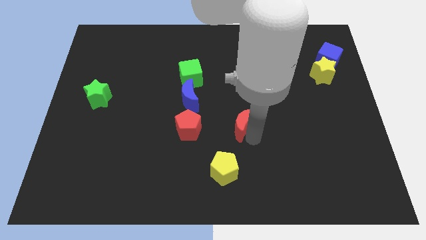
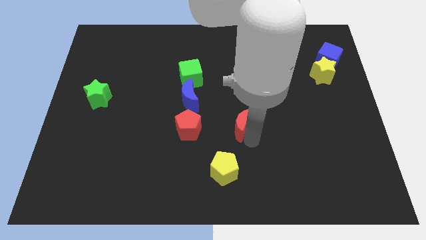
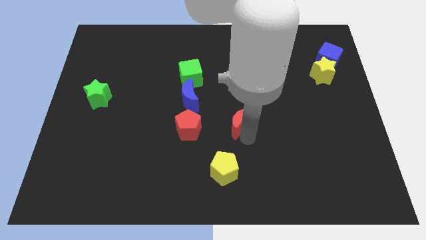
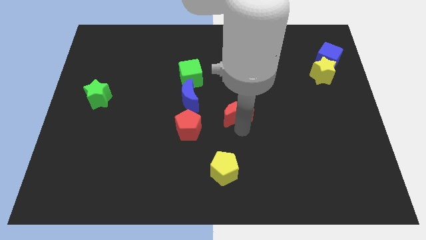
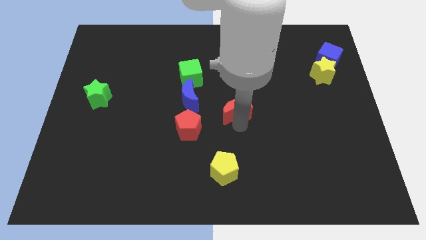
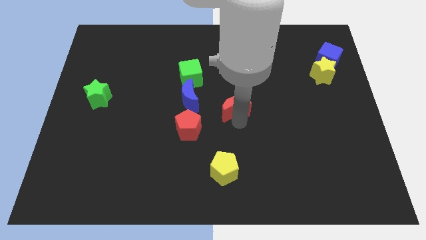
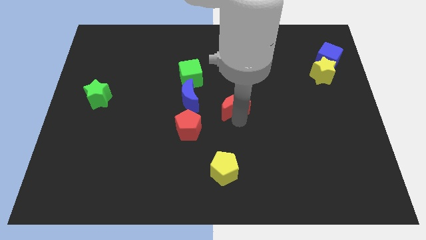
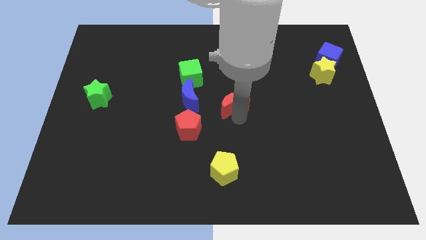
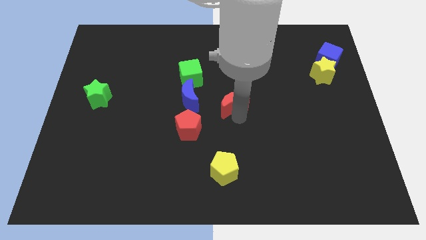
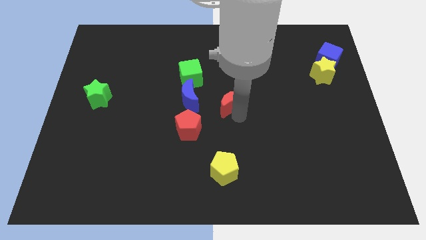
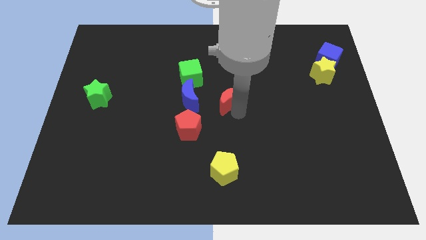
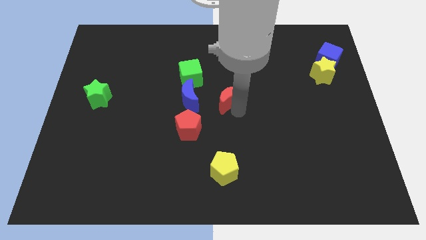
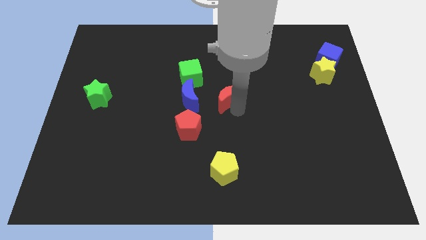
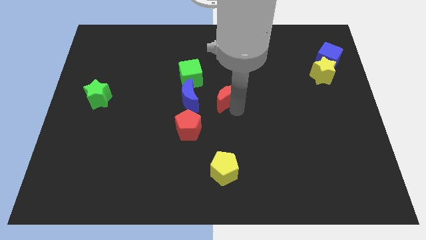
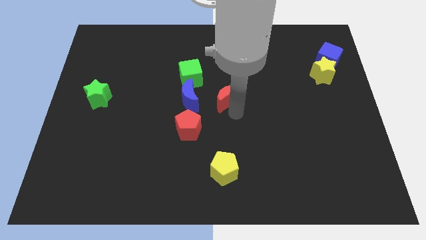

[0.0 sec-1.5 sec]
push red crescent beside the blue crescent

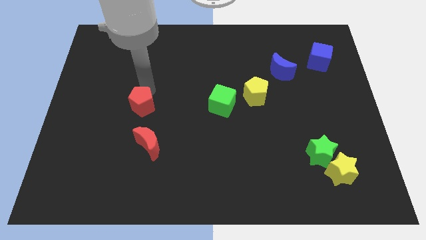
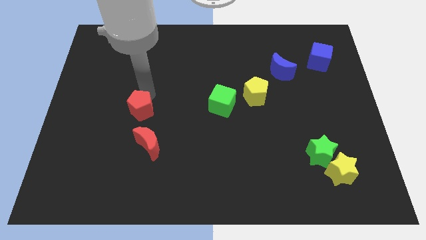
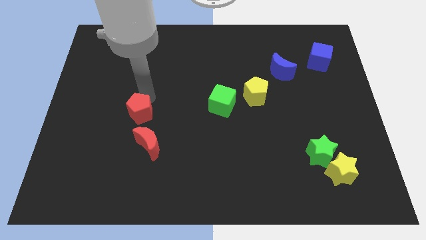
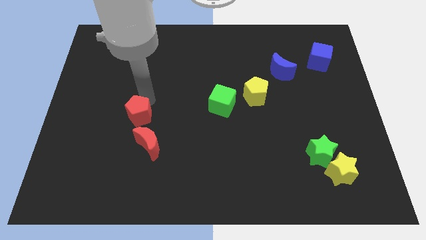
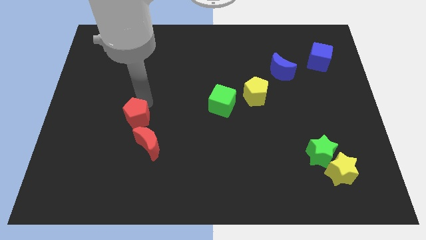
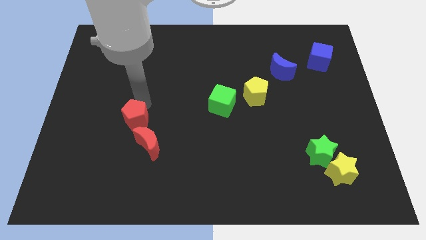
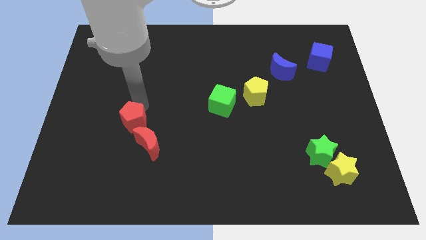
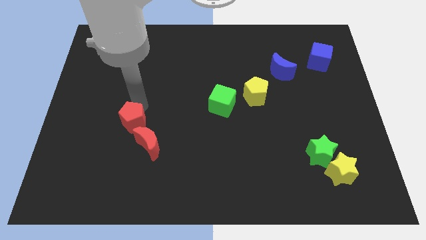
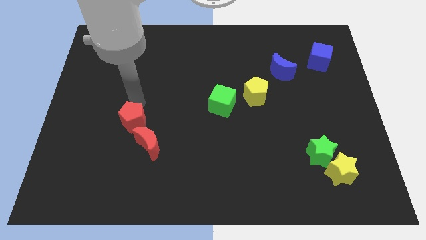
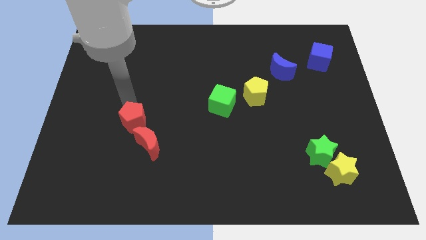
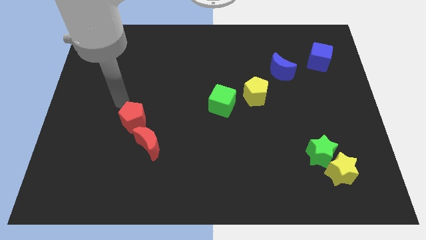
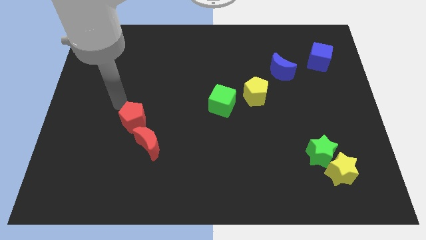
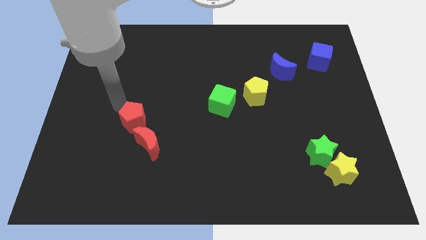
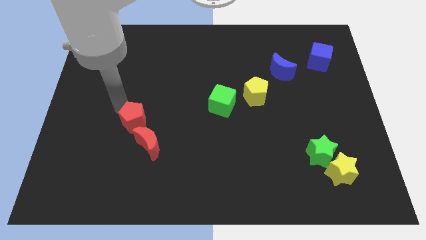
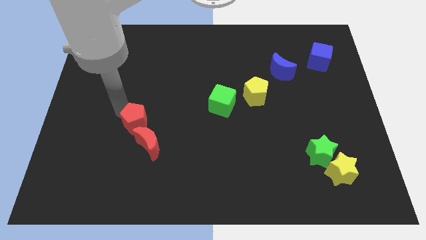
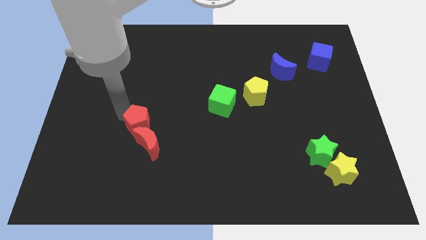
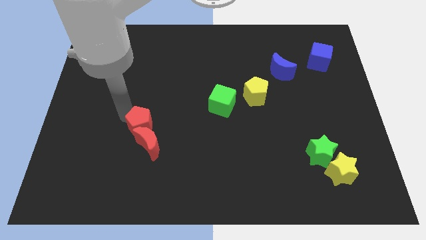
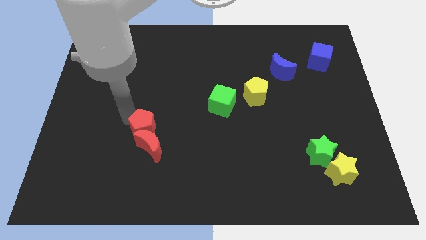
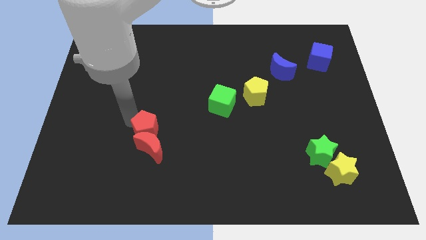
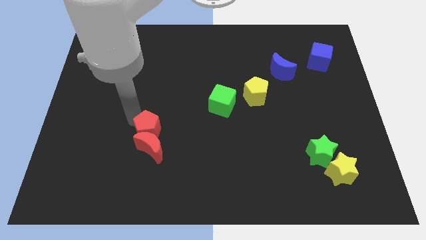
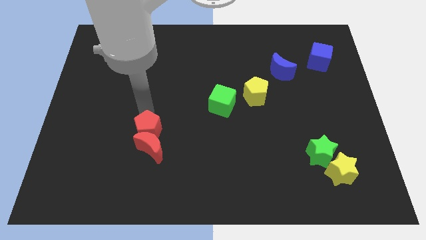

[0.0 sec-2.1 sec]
push red pentagon into the red crescent

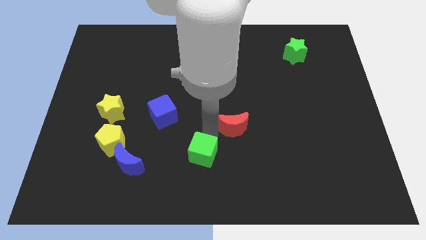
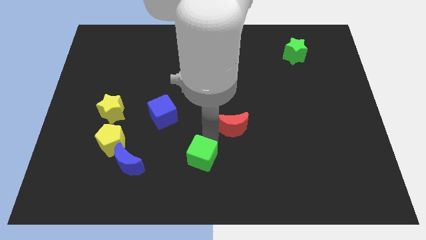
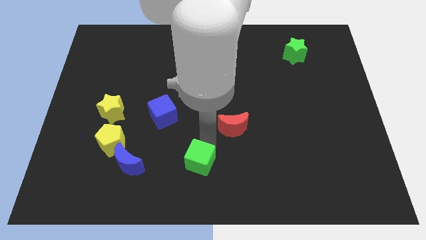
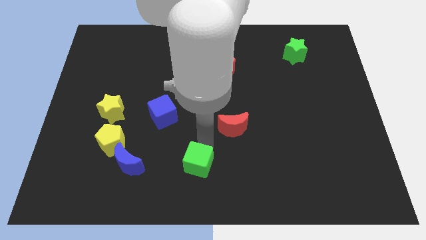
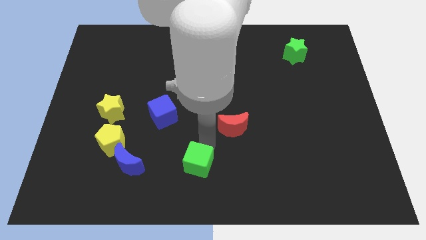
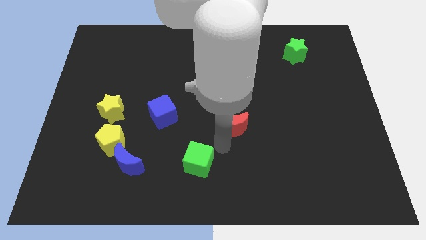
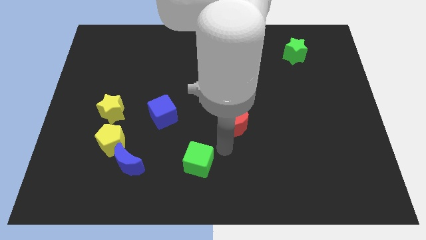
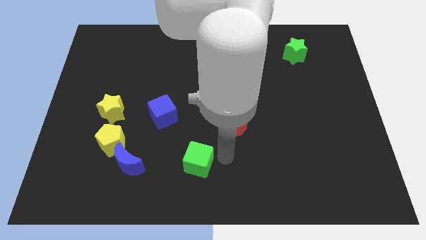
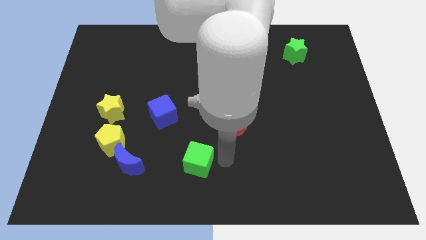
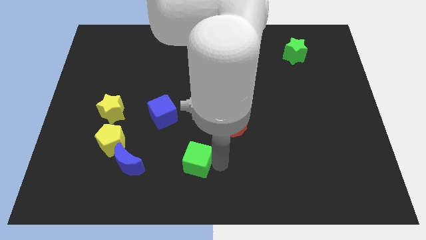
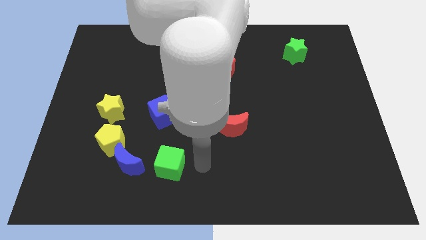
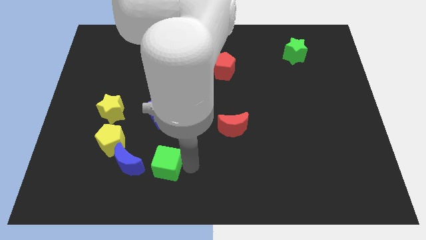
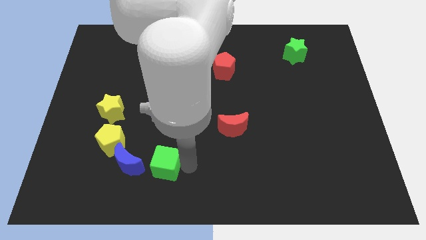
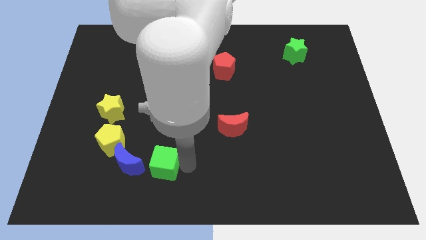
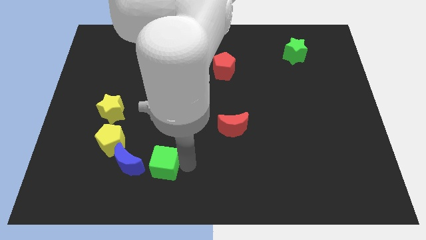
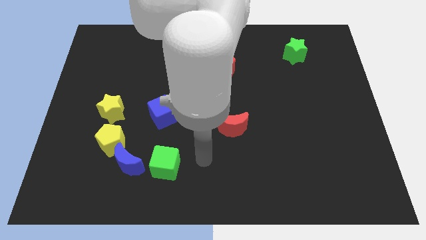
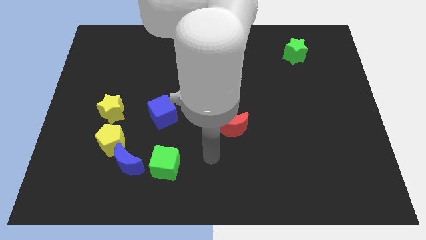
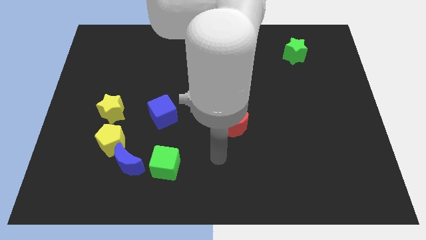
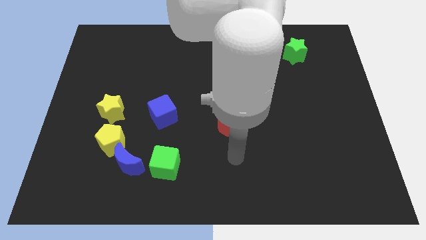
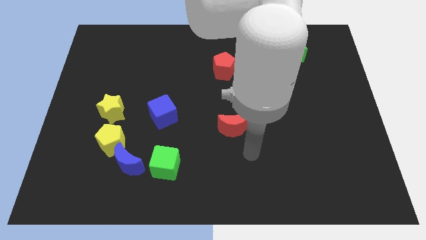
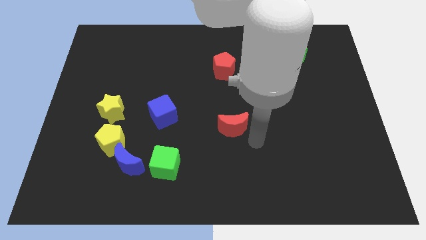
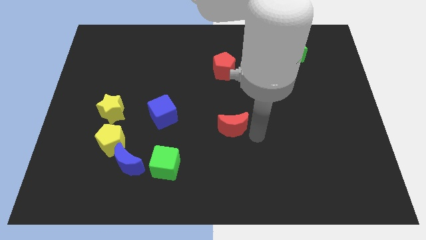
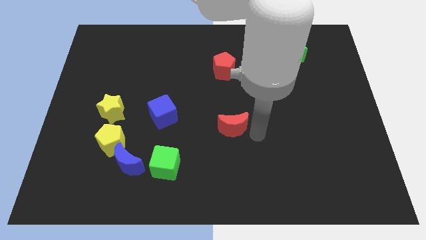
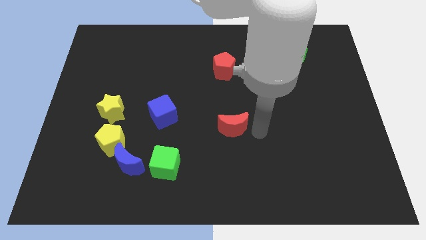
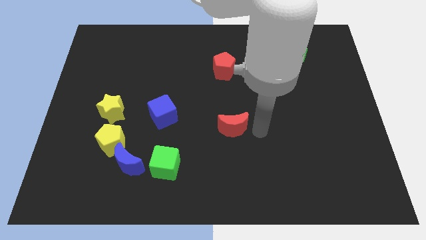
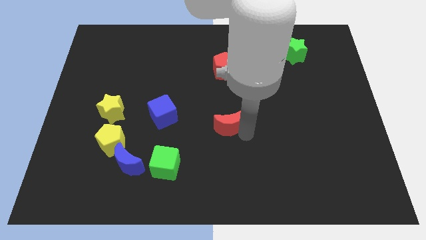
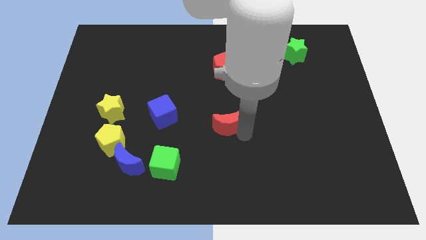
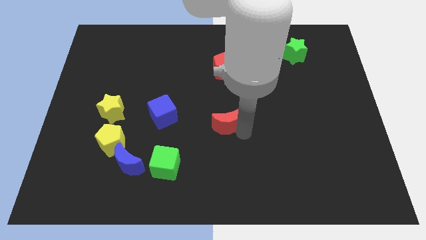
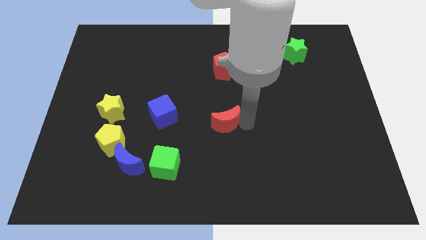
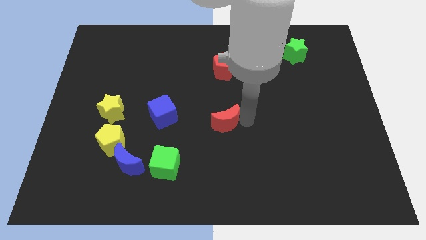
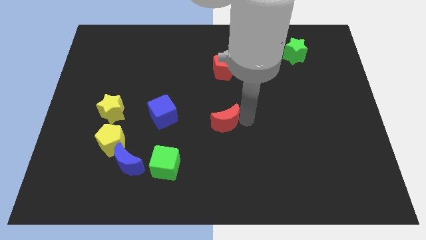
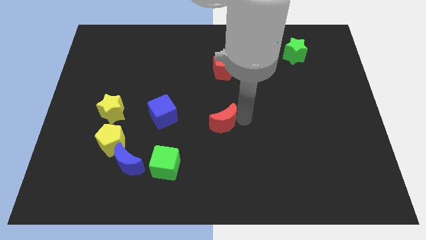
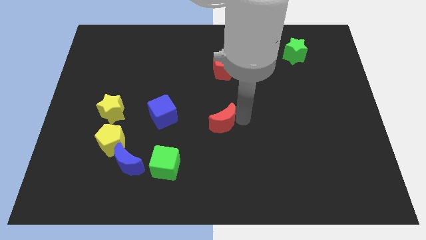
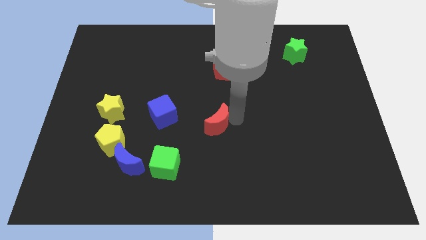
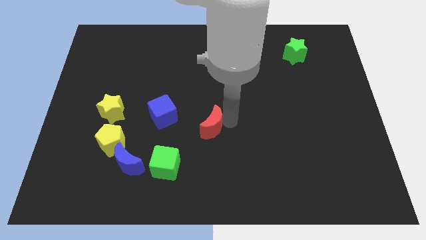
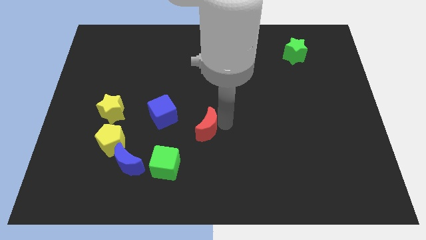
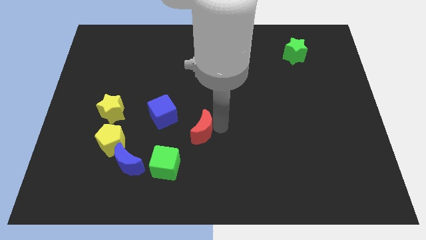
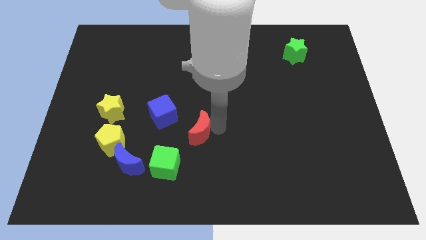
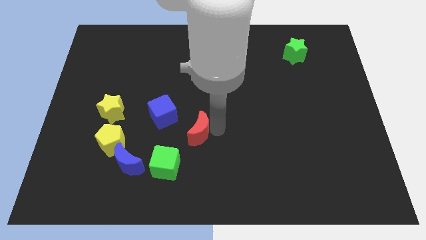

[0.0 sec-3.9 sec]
place green square right to the blue moon red moon towards green square

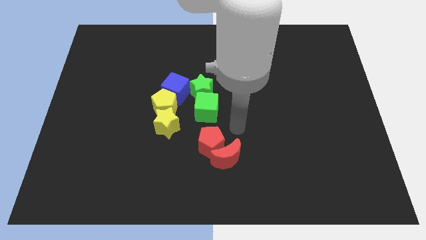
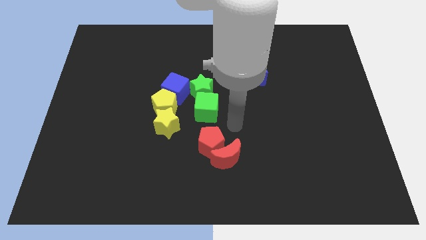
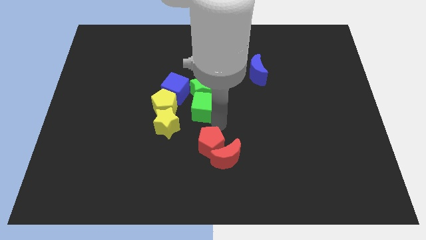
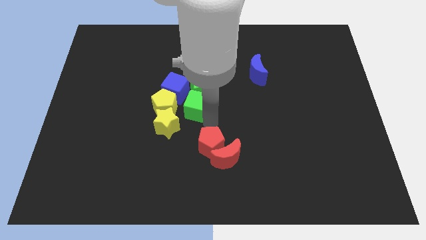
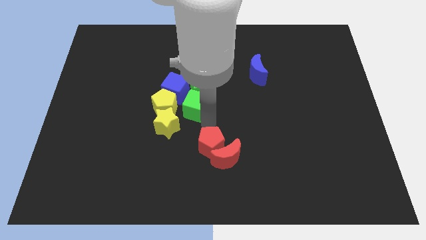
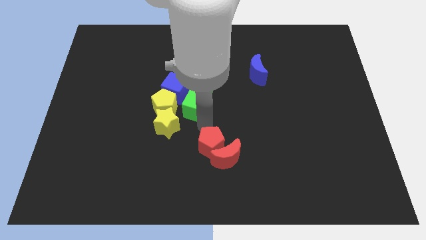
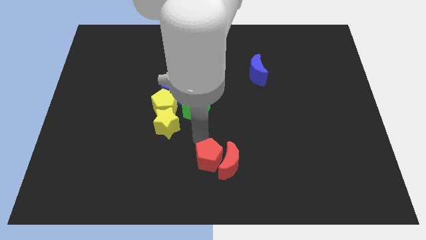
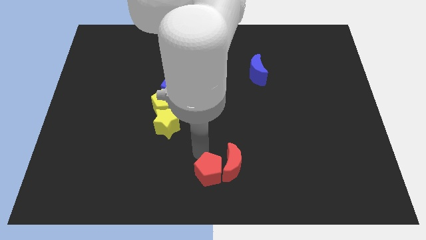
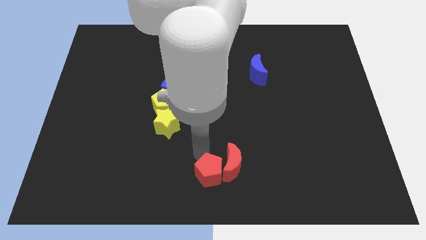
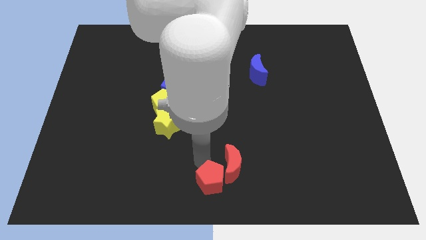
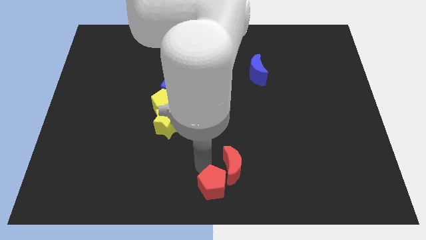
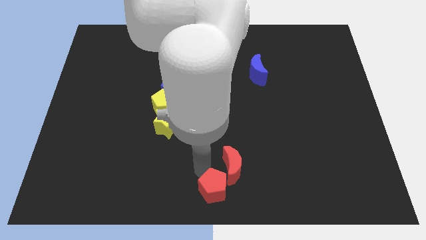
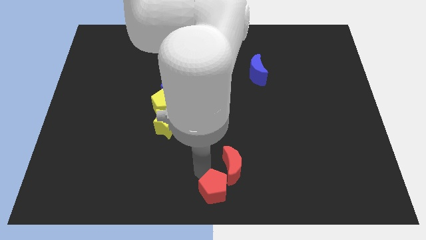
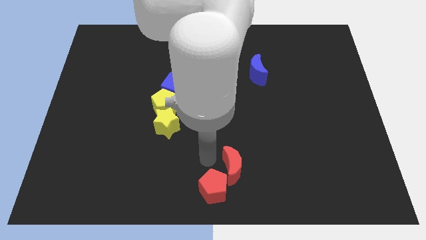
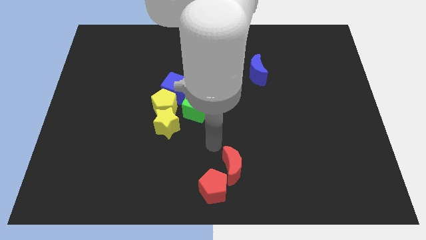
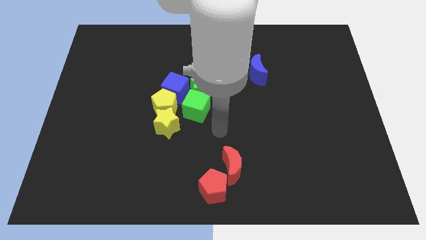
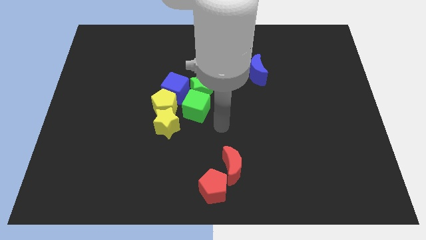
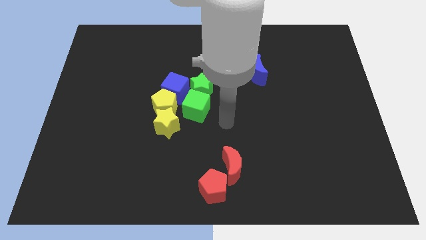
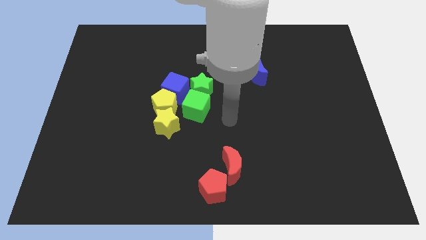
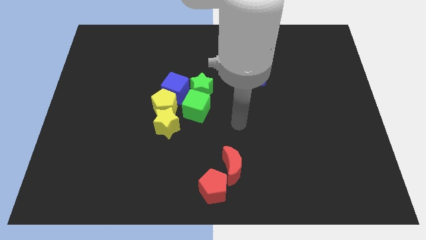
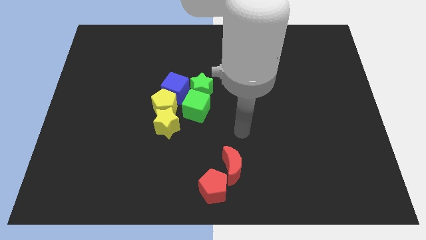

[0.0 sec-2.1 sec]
move red blocks towards bottom center
